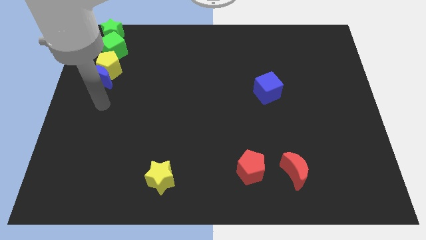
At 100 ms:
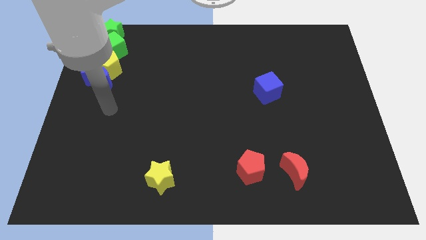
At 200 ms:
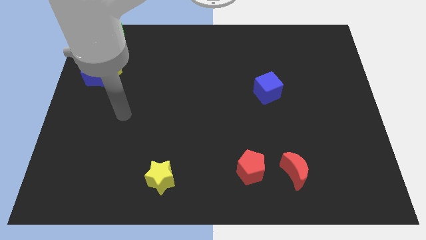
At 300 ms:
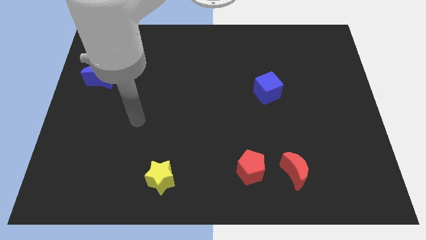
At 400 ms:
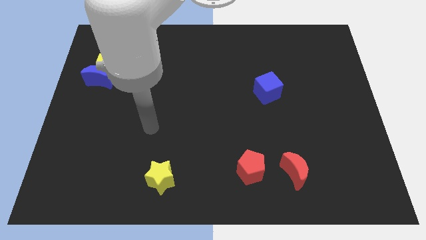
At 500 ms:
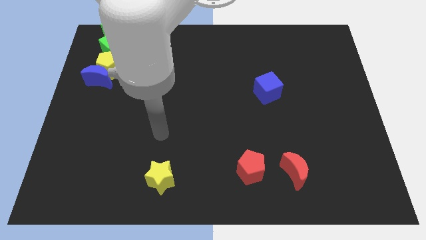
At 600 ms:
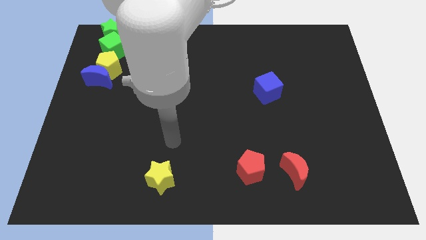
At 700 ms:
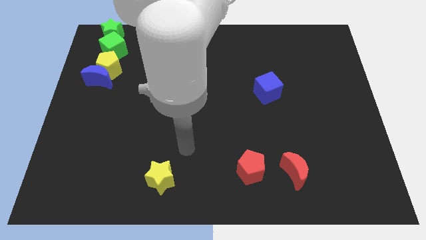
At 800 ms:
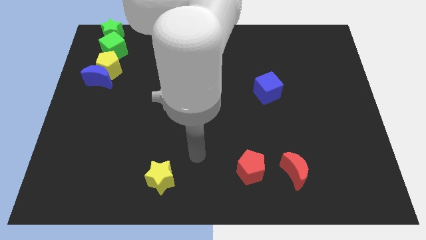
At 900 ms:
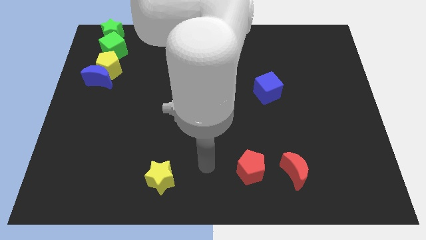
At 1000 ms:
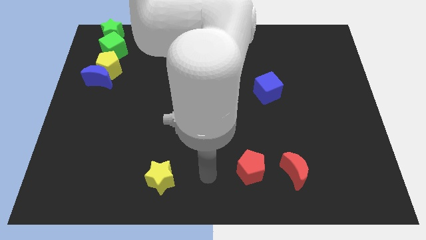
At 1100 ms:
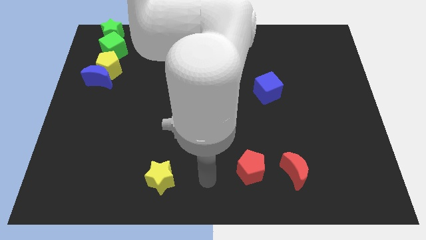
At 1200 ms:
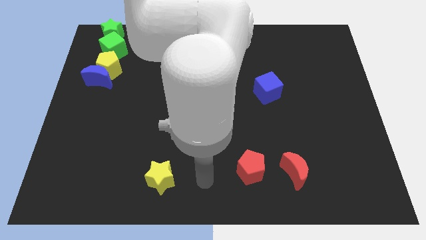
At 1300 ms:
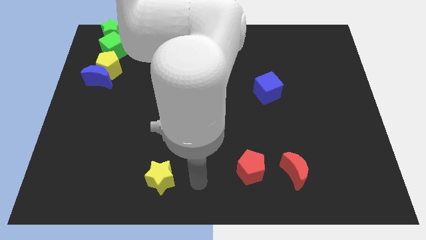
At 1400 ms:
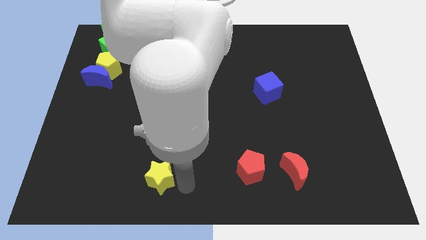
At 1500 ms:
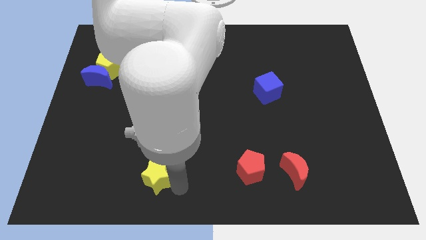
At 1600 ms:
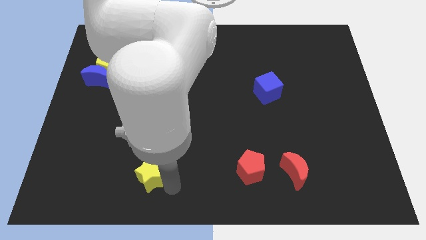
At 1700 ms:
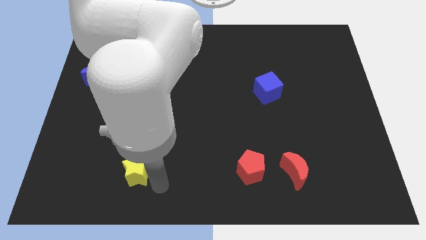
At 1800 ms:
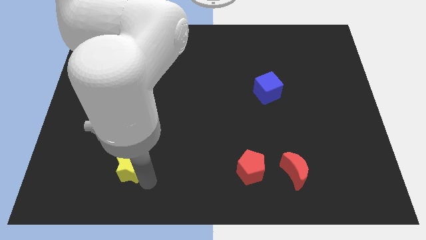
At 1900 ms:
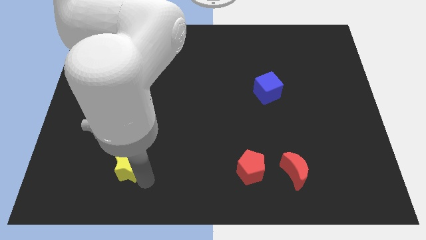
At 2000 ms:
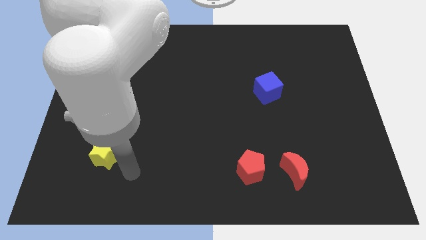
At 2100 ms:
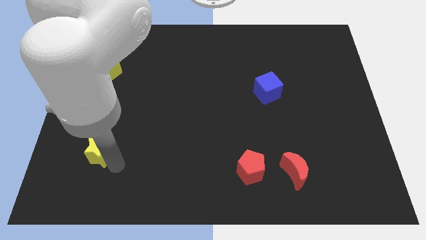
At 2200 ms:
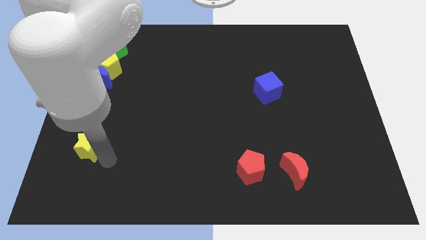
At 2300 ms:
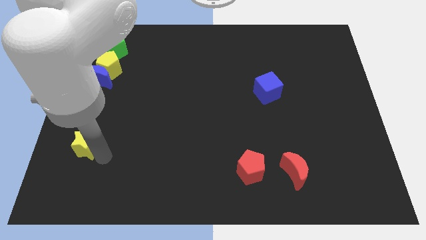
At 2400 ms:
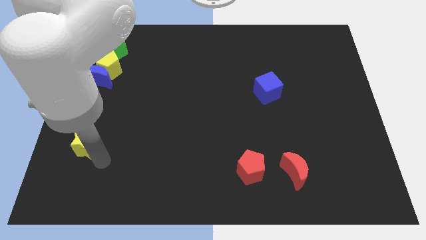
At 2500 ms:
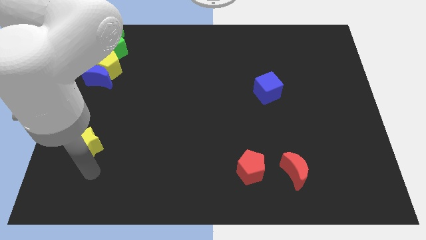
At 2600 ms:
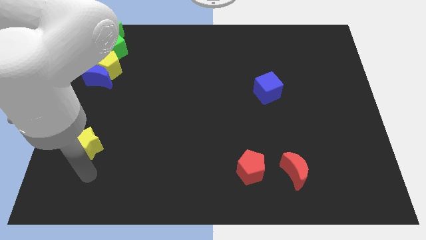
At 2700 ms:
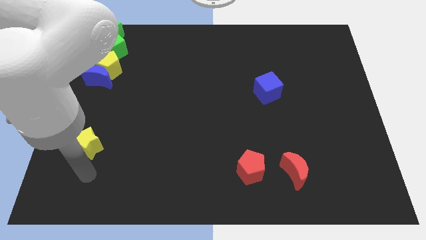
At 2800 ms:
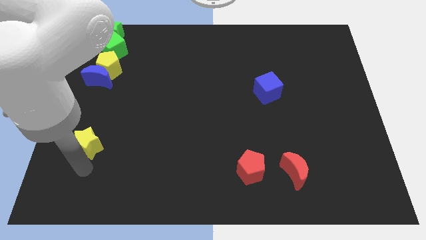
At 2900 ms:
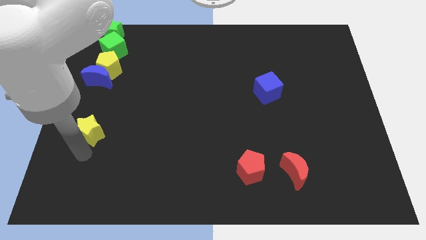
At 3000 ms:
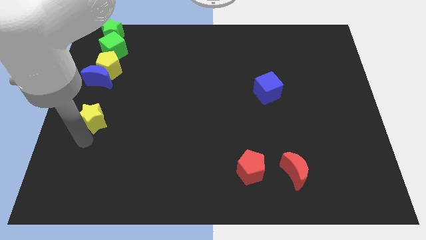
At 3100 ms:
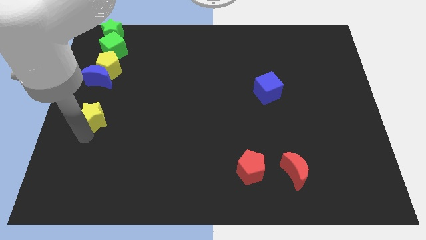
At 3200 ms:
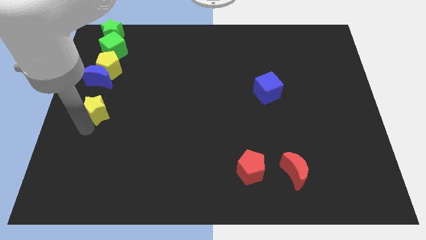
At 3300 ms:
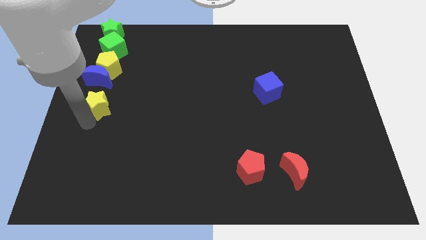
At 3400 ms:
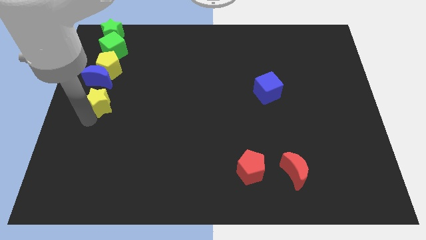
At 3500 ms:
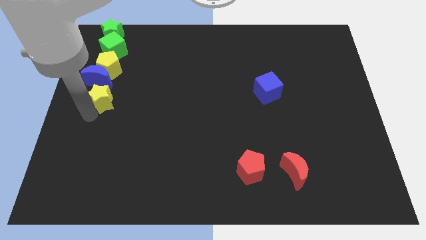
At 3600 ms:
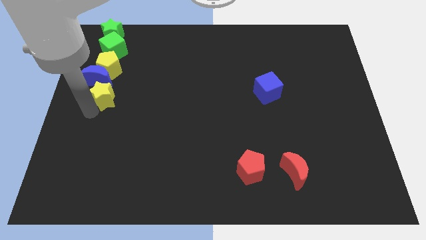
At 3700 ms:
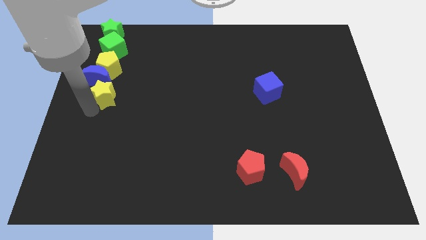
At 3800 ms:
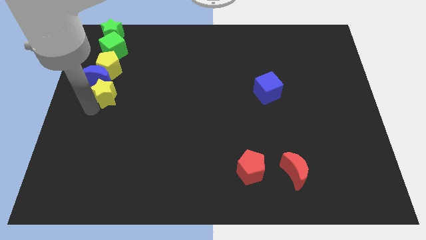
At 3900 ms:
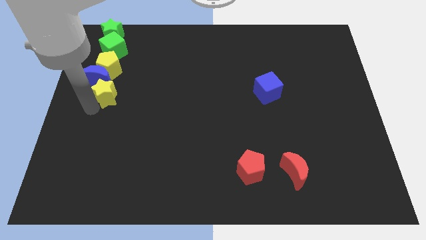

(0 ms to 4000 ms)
push the yellow star into the botom side of the blue moon

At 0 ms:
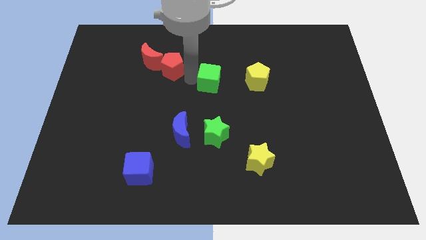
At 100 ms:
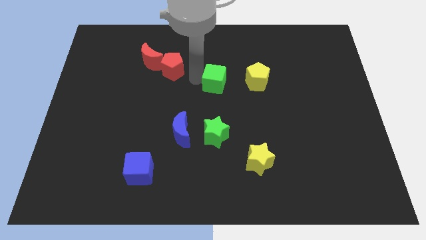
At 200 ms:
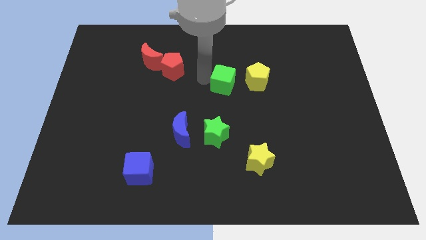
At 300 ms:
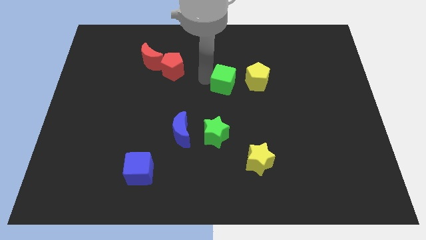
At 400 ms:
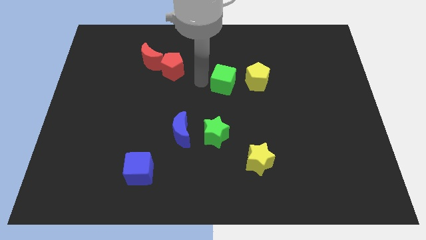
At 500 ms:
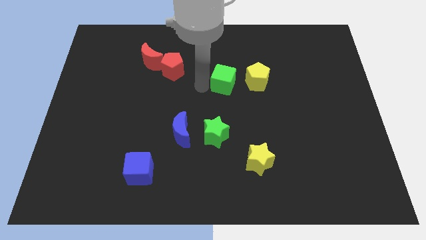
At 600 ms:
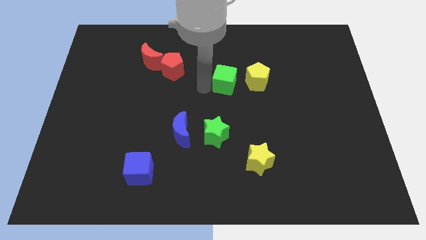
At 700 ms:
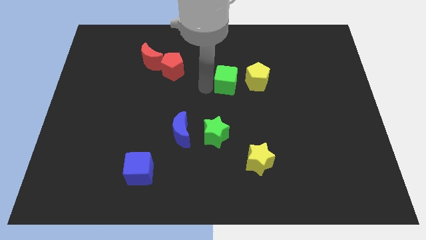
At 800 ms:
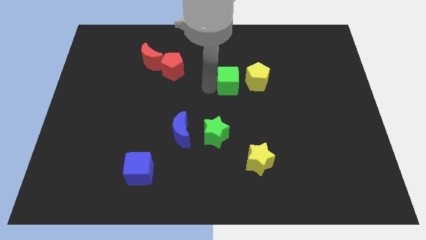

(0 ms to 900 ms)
move the green cube slightly on the right side of the yellow pentagon

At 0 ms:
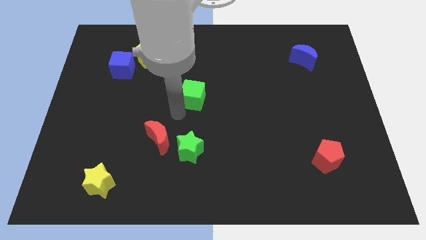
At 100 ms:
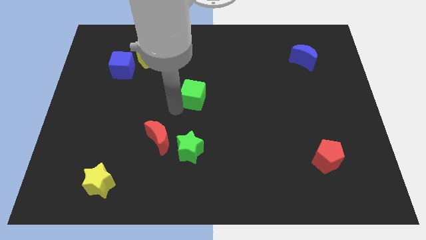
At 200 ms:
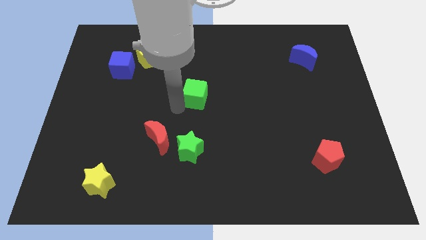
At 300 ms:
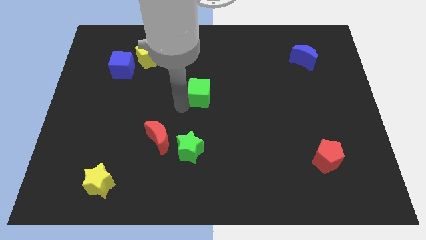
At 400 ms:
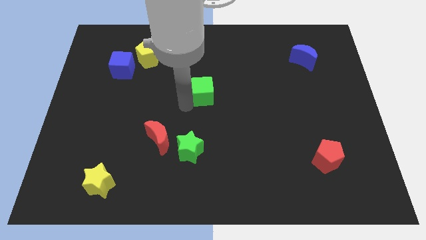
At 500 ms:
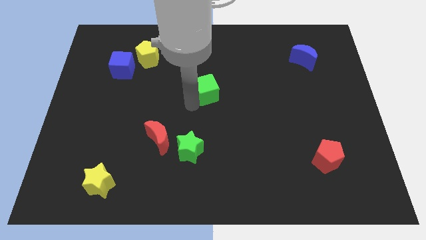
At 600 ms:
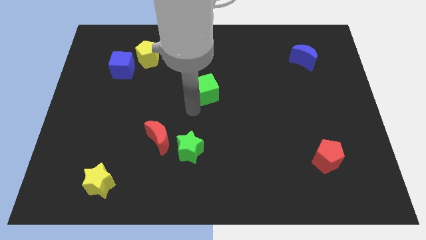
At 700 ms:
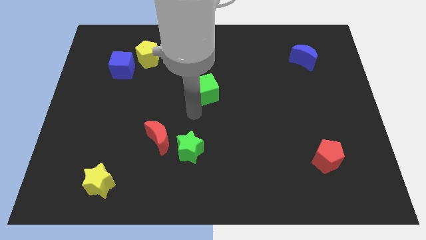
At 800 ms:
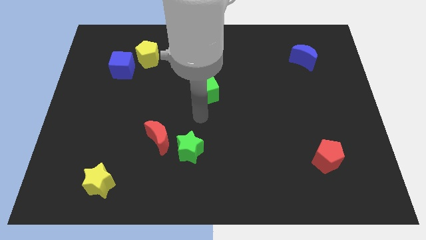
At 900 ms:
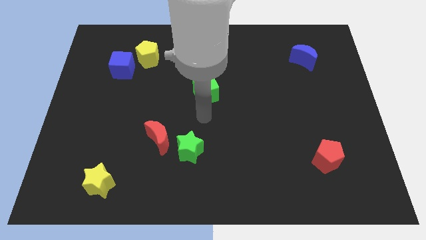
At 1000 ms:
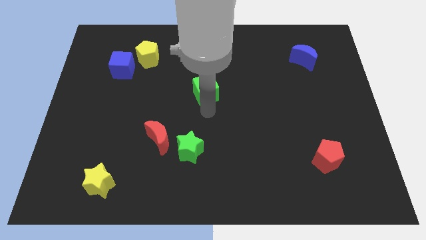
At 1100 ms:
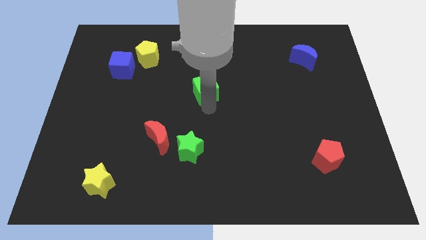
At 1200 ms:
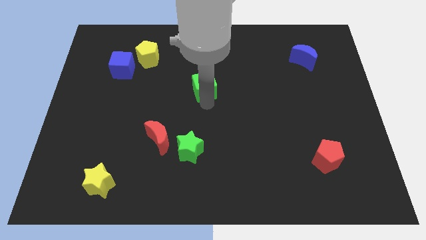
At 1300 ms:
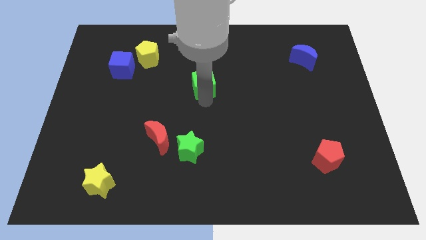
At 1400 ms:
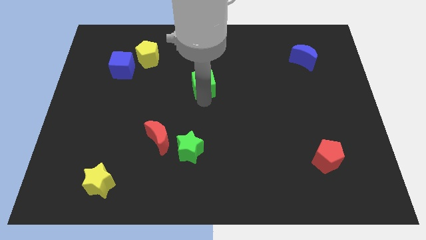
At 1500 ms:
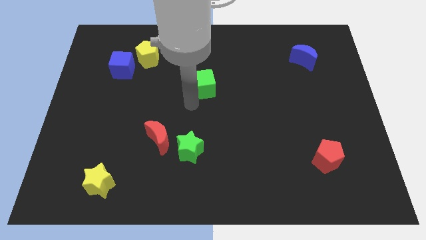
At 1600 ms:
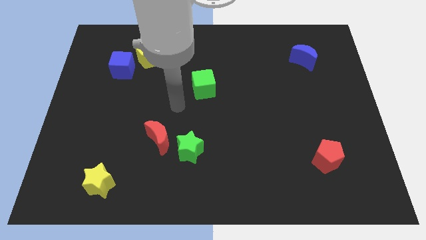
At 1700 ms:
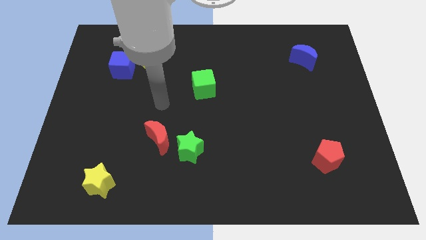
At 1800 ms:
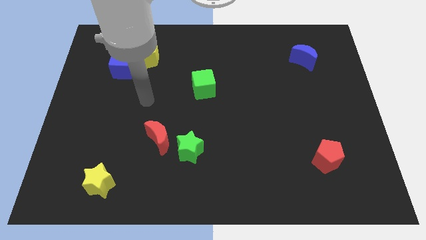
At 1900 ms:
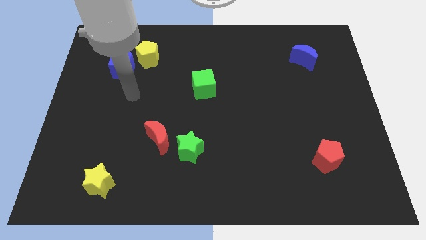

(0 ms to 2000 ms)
move the green cube upwards

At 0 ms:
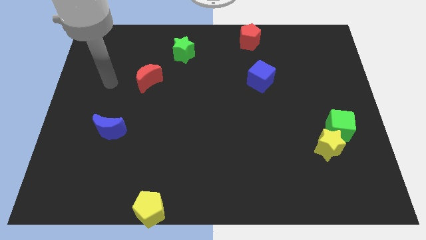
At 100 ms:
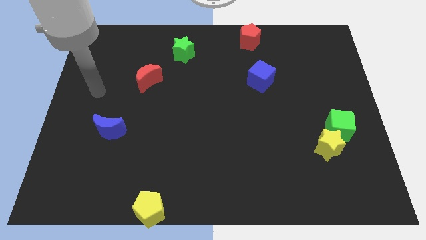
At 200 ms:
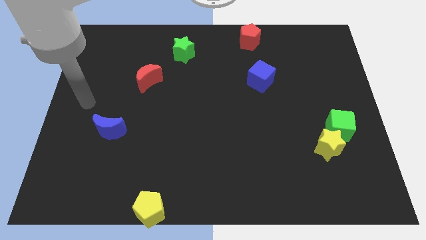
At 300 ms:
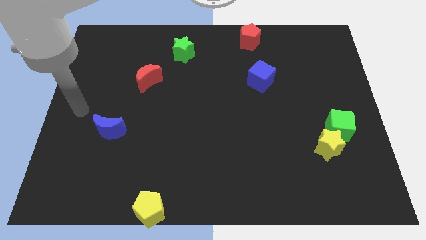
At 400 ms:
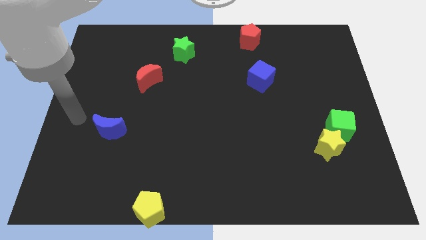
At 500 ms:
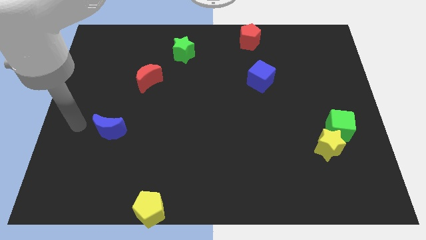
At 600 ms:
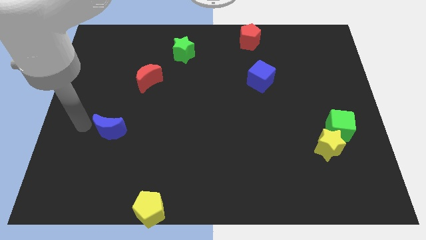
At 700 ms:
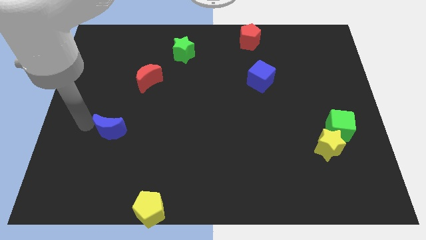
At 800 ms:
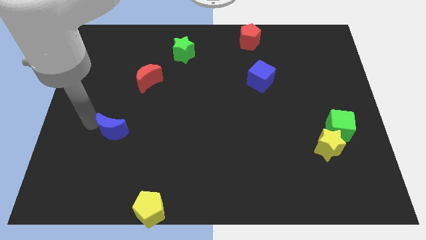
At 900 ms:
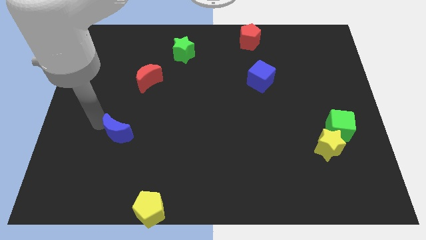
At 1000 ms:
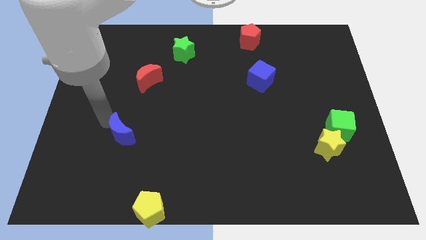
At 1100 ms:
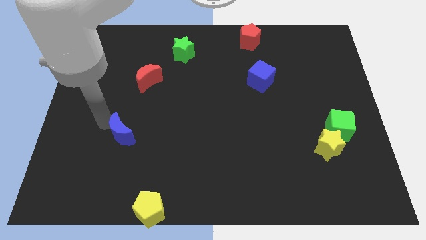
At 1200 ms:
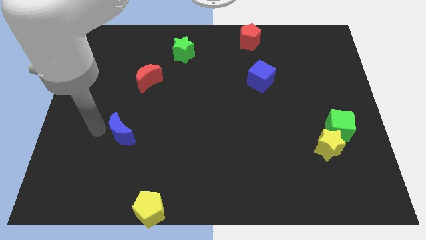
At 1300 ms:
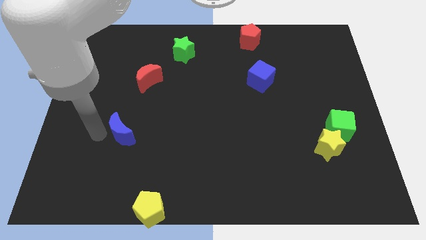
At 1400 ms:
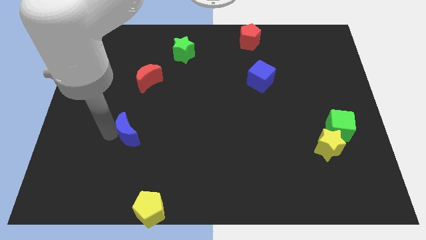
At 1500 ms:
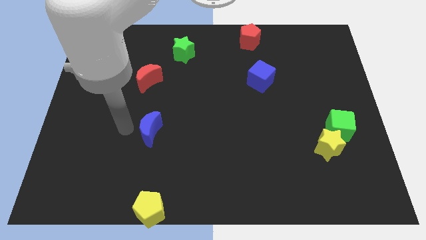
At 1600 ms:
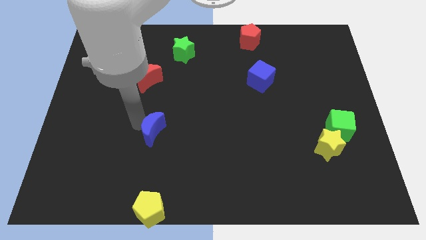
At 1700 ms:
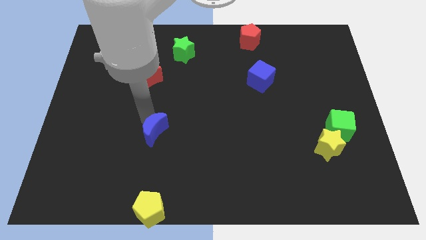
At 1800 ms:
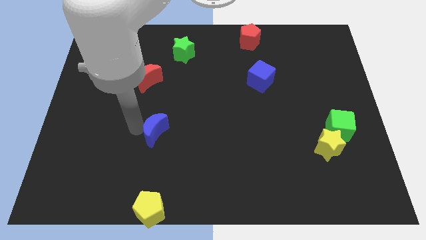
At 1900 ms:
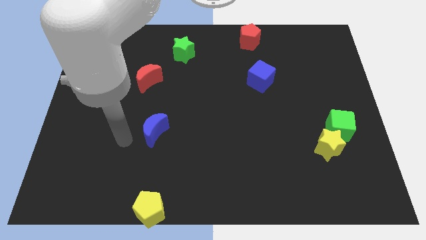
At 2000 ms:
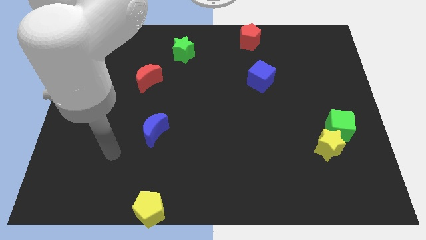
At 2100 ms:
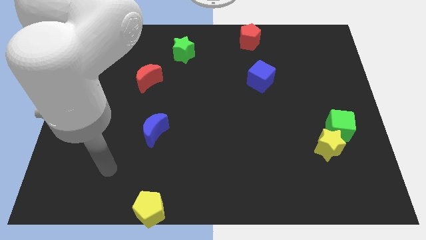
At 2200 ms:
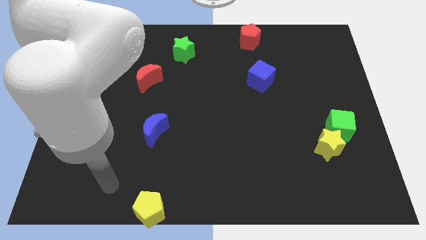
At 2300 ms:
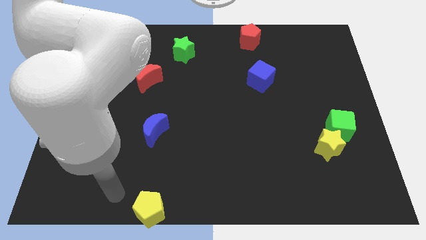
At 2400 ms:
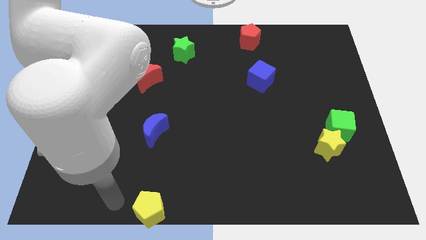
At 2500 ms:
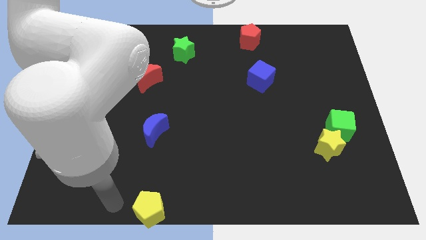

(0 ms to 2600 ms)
move the blue moon to the center
